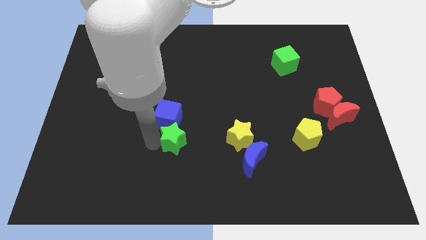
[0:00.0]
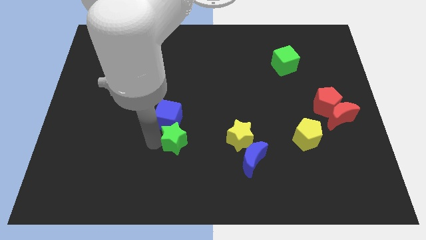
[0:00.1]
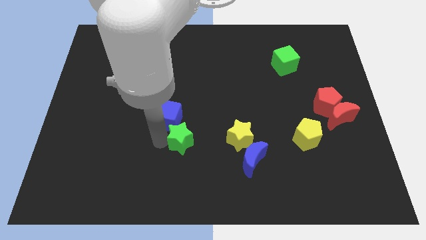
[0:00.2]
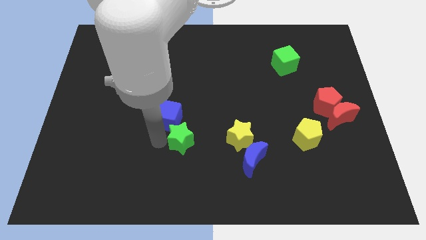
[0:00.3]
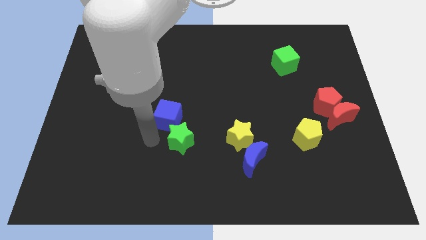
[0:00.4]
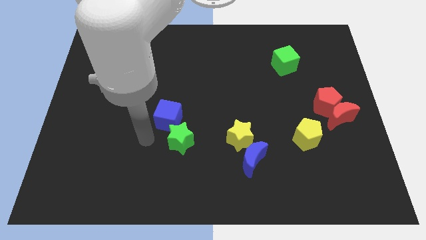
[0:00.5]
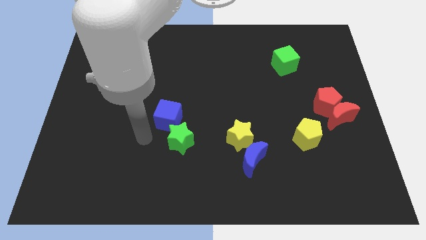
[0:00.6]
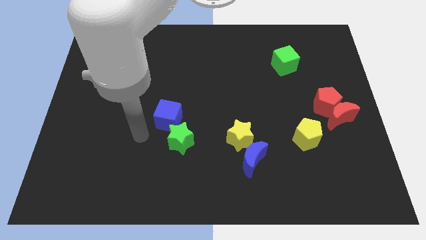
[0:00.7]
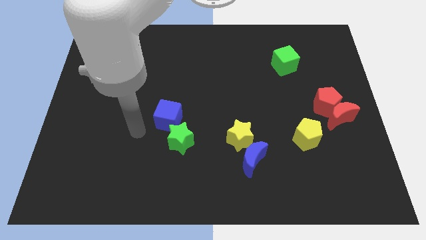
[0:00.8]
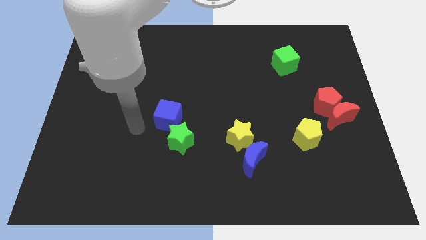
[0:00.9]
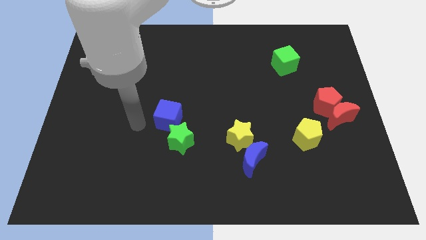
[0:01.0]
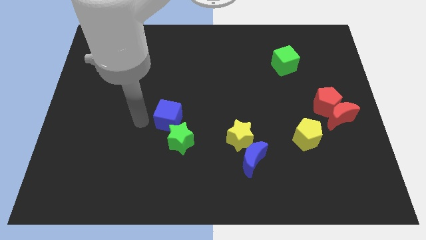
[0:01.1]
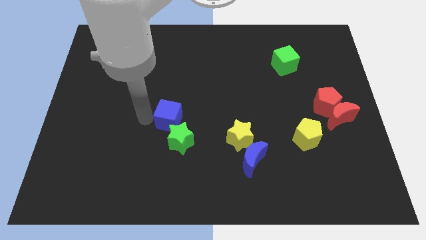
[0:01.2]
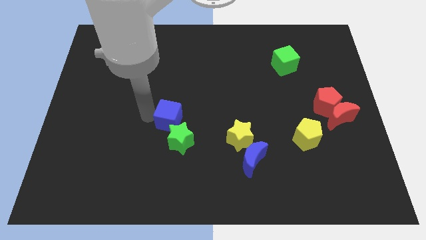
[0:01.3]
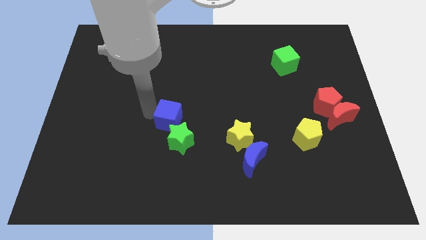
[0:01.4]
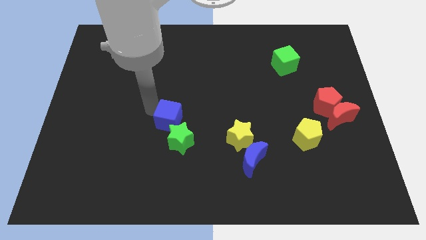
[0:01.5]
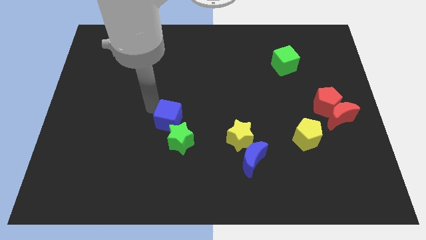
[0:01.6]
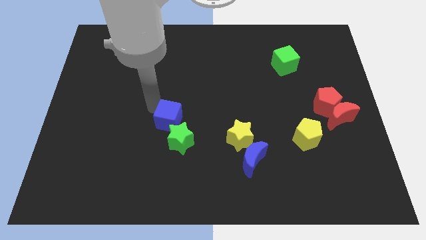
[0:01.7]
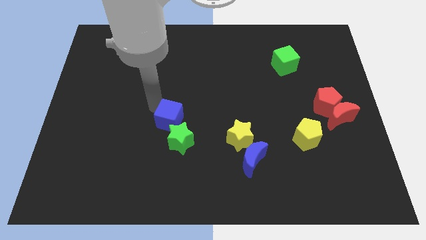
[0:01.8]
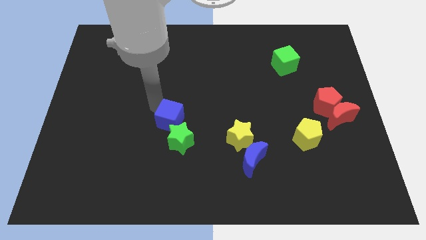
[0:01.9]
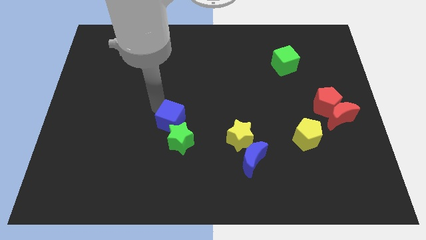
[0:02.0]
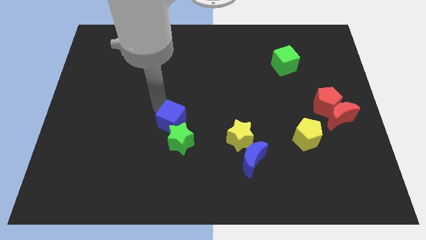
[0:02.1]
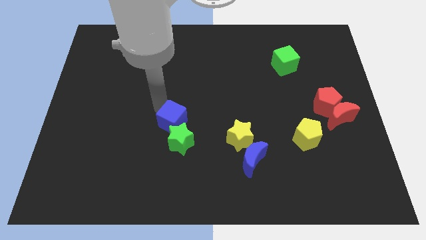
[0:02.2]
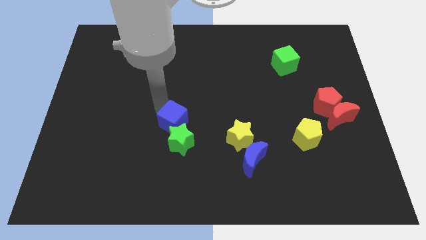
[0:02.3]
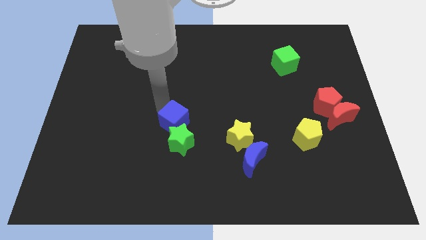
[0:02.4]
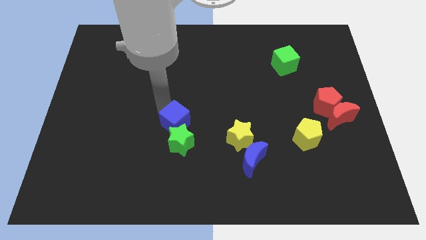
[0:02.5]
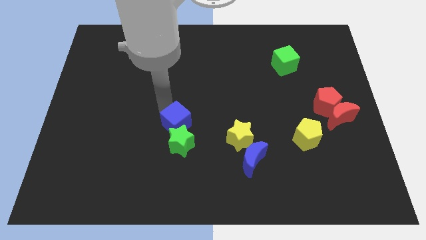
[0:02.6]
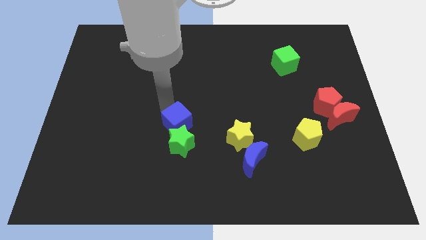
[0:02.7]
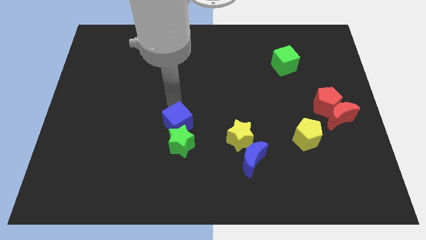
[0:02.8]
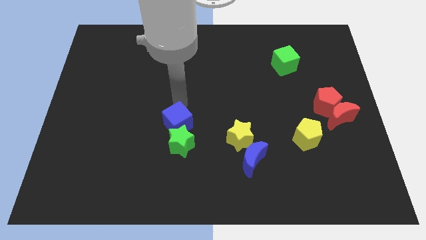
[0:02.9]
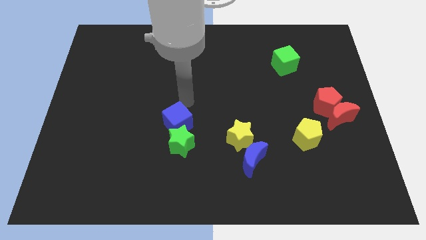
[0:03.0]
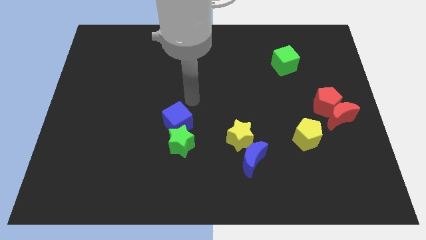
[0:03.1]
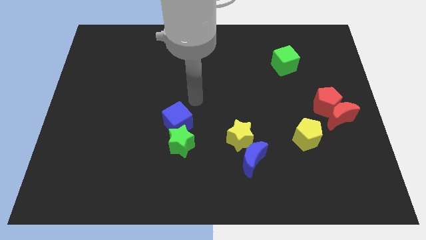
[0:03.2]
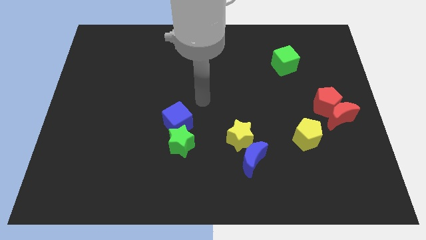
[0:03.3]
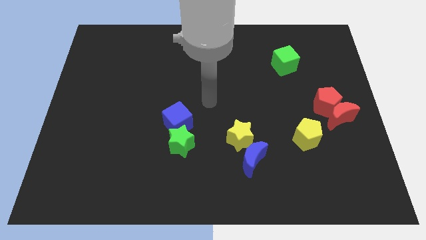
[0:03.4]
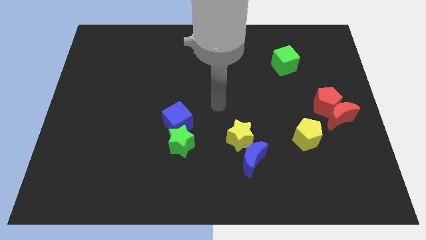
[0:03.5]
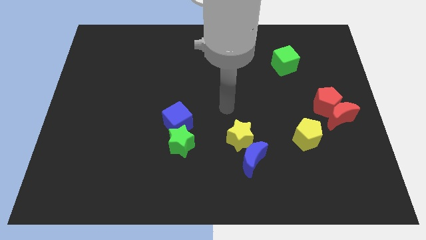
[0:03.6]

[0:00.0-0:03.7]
push the blue cube slightly to the top of the green star

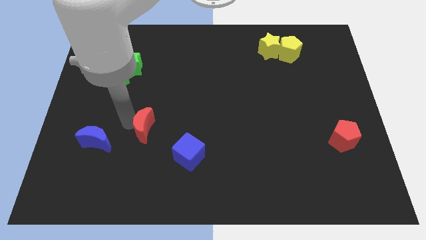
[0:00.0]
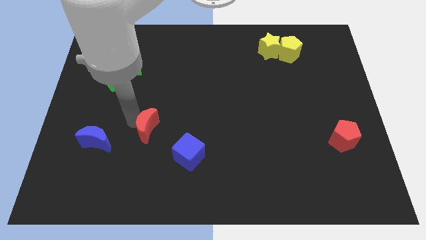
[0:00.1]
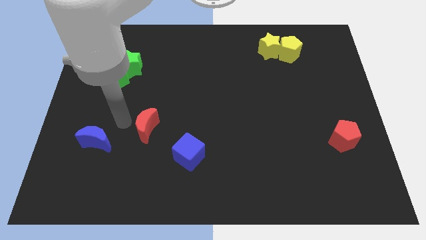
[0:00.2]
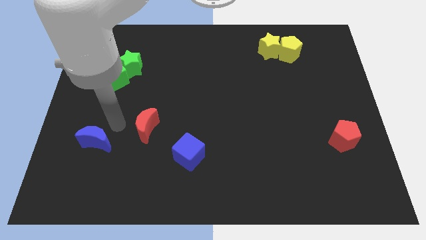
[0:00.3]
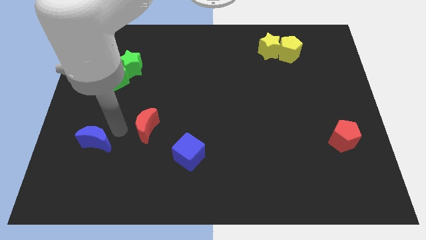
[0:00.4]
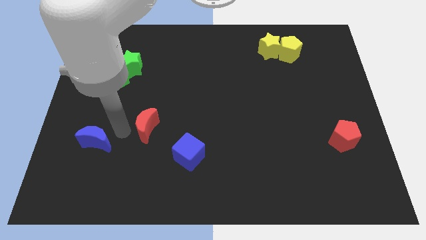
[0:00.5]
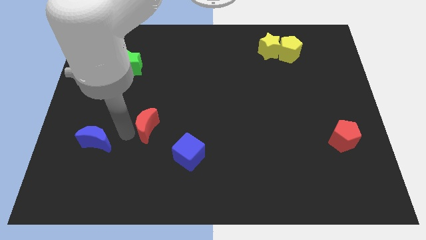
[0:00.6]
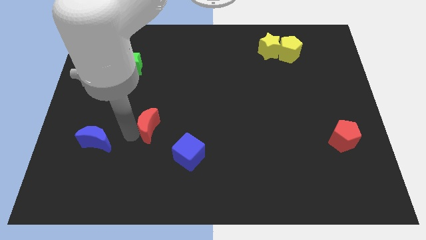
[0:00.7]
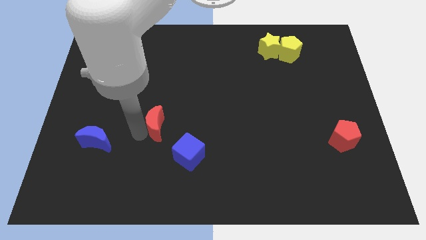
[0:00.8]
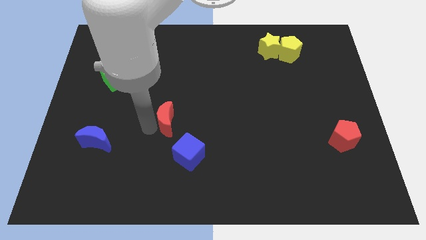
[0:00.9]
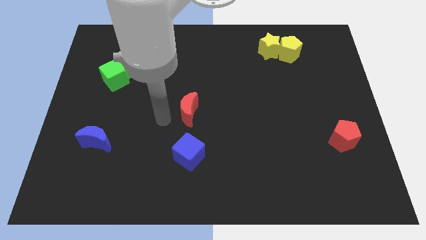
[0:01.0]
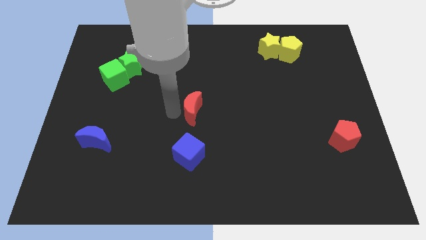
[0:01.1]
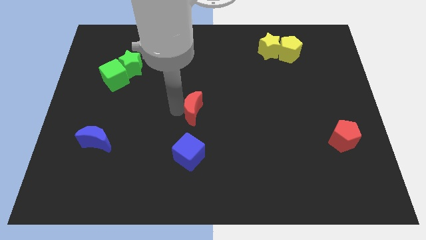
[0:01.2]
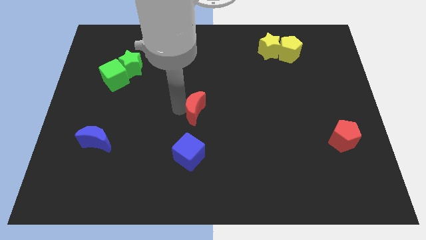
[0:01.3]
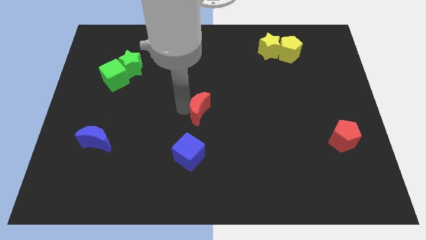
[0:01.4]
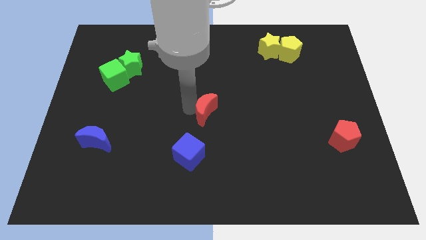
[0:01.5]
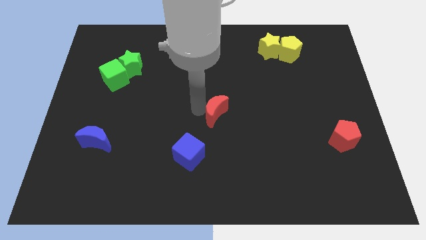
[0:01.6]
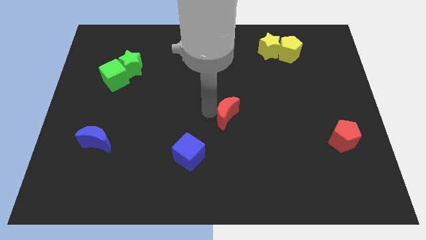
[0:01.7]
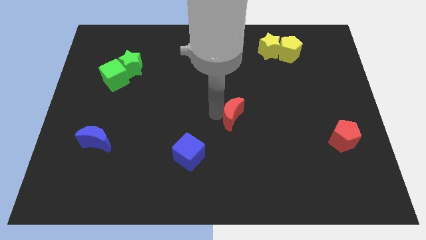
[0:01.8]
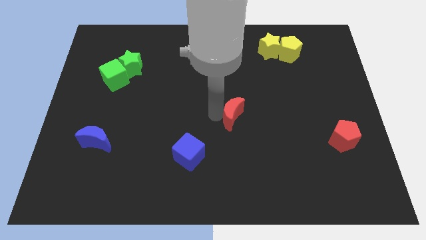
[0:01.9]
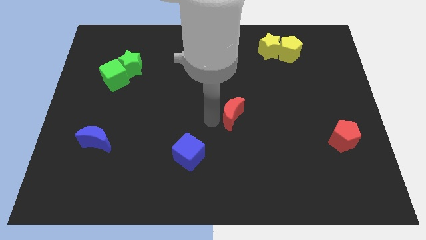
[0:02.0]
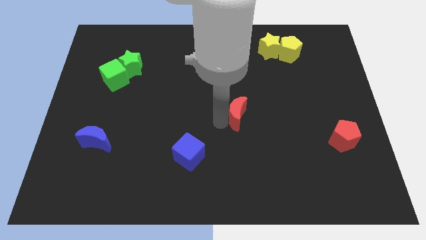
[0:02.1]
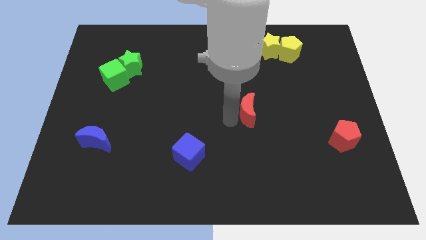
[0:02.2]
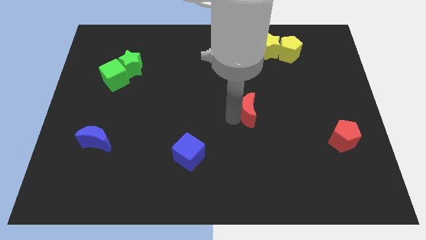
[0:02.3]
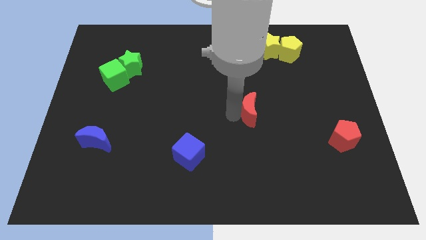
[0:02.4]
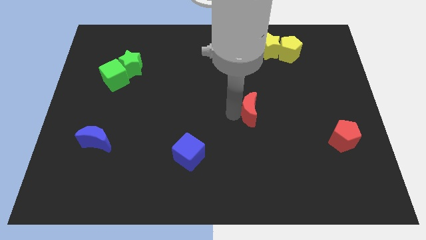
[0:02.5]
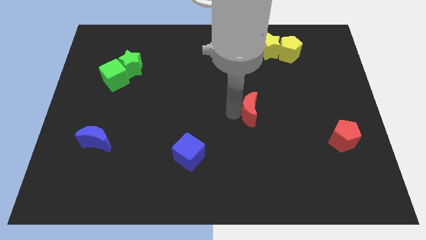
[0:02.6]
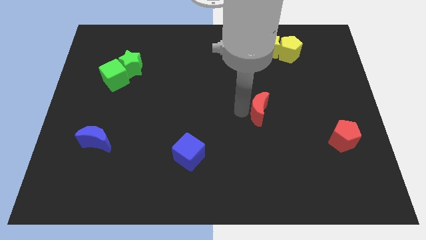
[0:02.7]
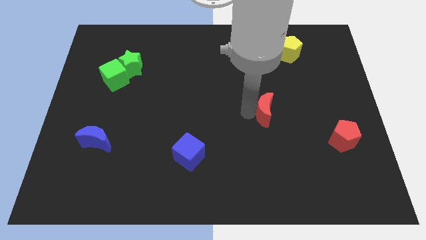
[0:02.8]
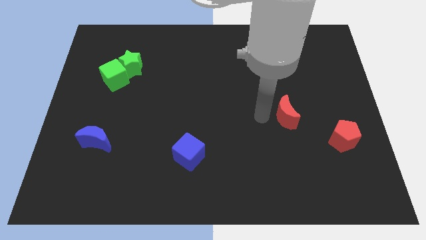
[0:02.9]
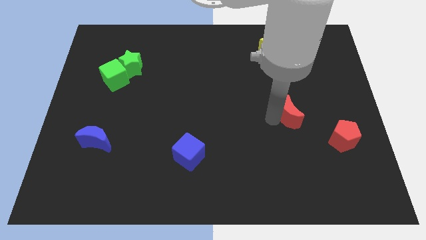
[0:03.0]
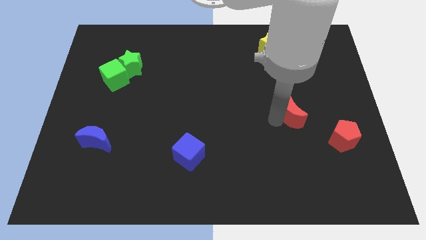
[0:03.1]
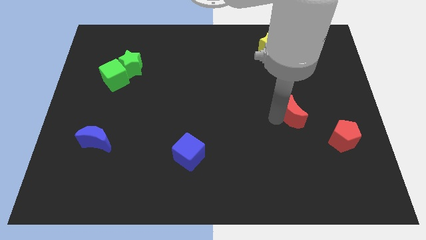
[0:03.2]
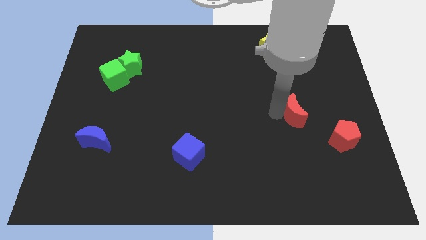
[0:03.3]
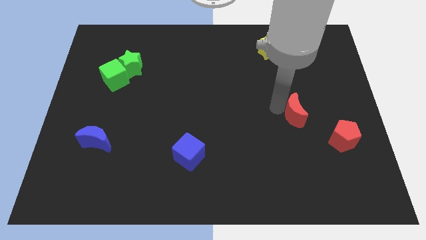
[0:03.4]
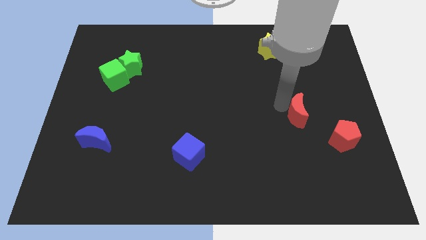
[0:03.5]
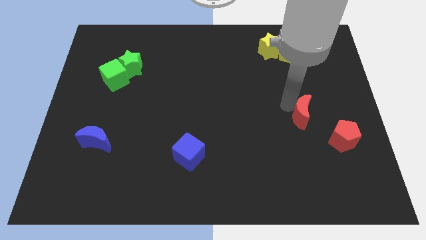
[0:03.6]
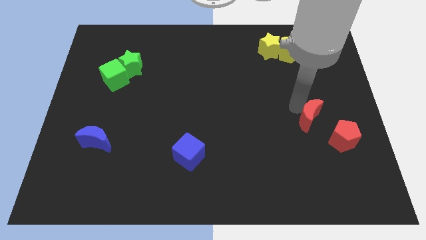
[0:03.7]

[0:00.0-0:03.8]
push the red crescent towards the red pentagon

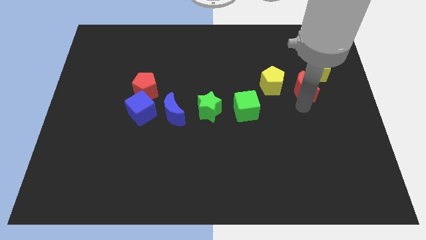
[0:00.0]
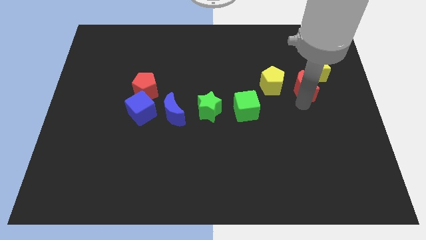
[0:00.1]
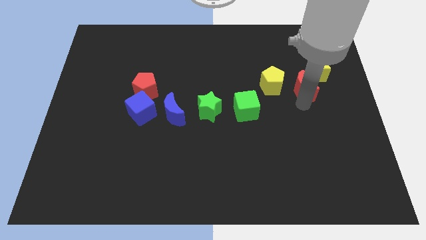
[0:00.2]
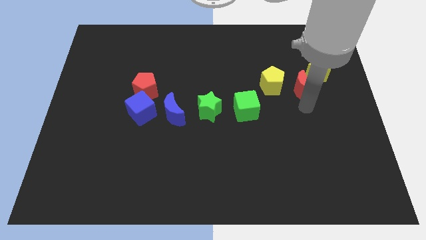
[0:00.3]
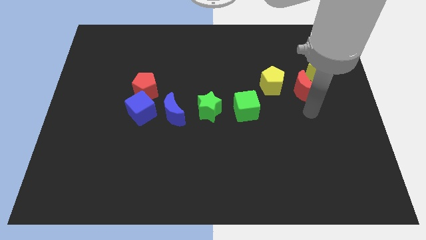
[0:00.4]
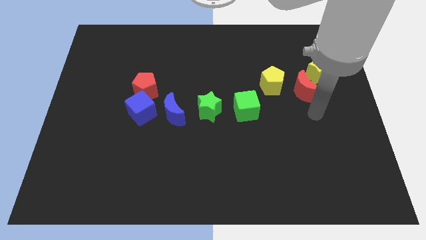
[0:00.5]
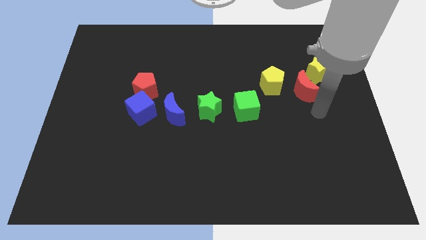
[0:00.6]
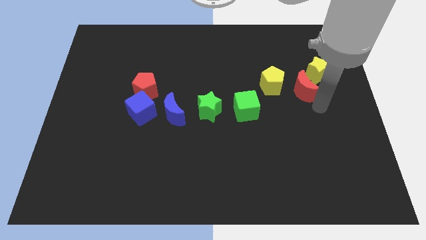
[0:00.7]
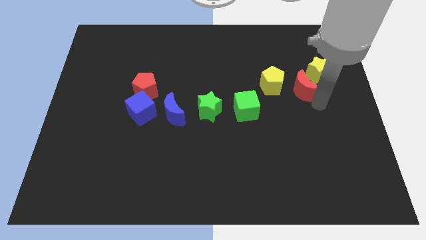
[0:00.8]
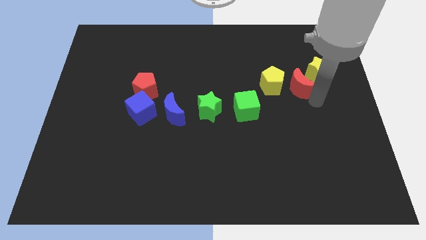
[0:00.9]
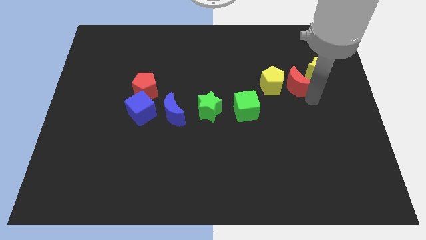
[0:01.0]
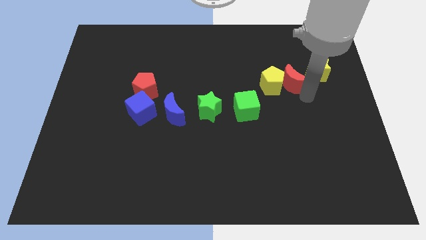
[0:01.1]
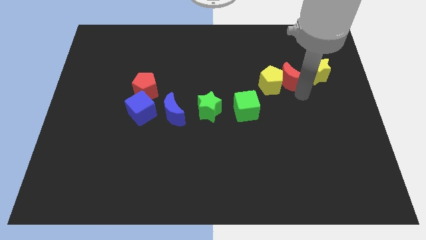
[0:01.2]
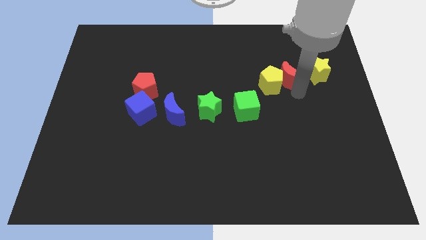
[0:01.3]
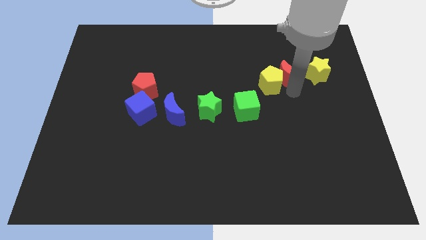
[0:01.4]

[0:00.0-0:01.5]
place red moon between the yellow pentagon and yellow star
